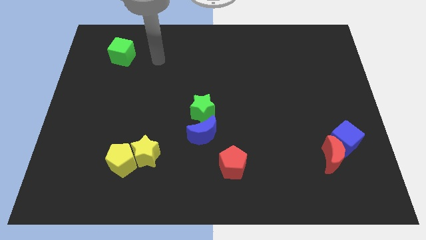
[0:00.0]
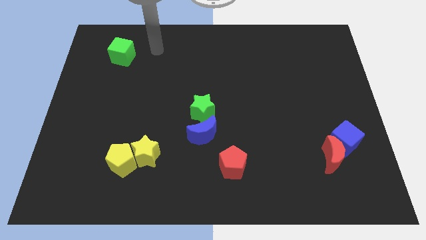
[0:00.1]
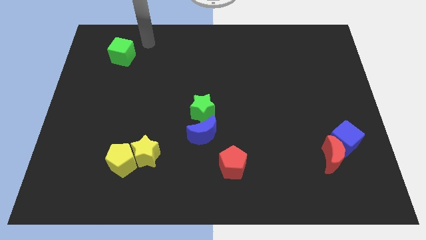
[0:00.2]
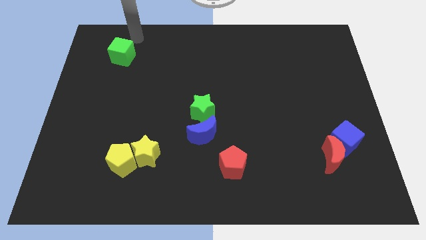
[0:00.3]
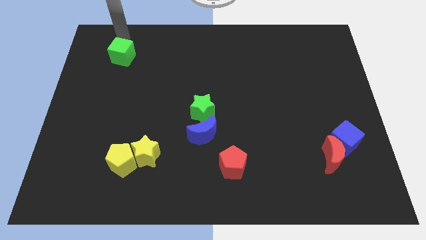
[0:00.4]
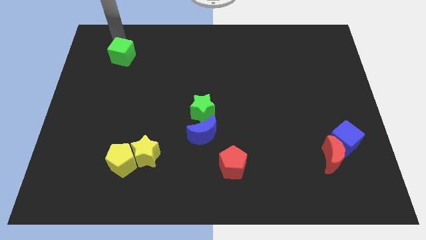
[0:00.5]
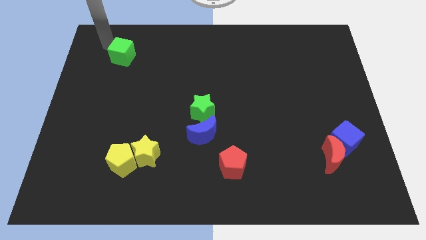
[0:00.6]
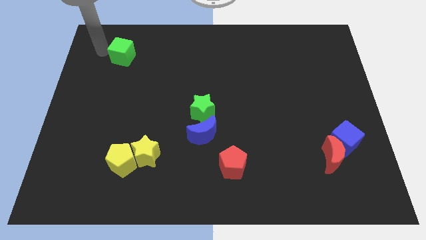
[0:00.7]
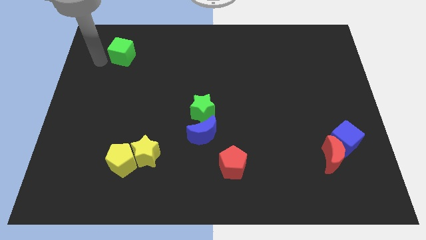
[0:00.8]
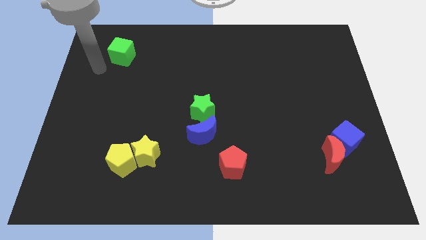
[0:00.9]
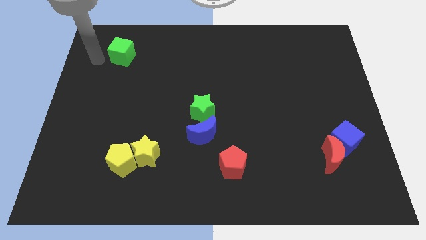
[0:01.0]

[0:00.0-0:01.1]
move arm below the green cube

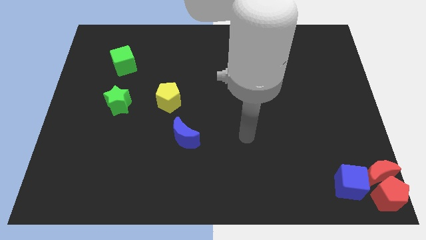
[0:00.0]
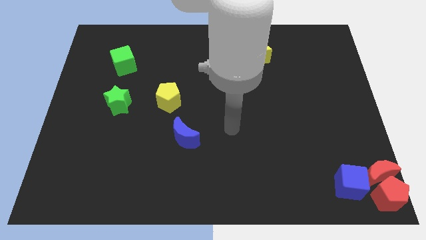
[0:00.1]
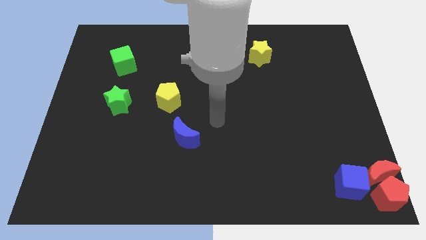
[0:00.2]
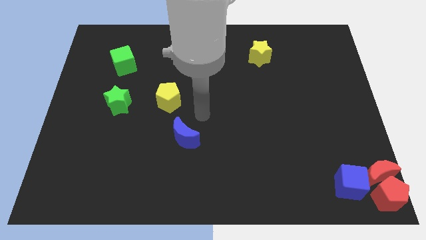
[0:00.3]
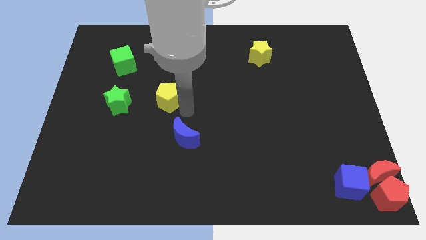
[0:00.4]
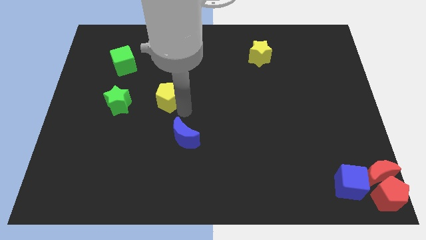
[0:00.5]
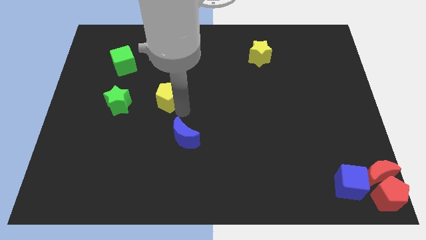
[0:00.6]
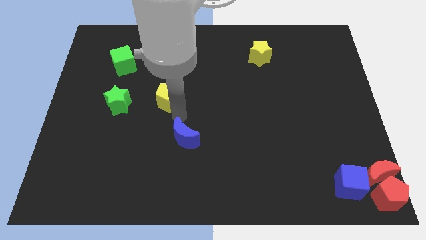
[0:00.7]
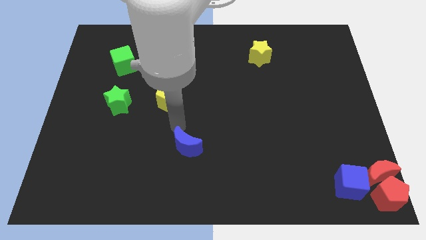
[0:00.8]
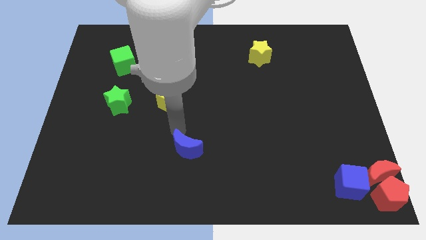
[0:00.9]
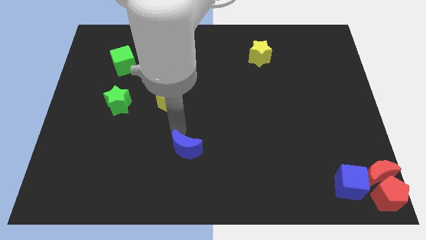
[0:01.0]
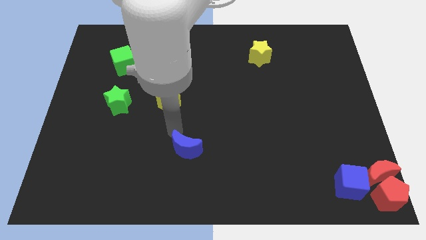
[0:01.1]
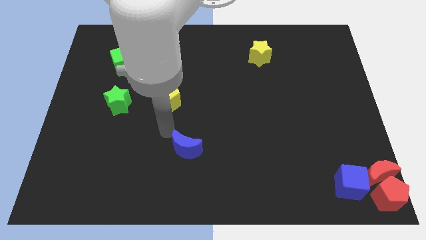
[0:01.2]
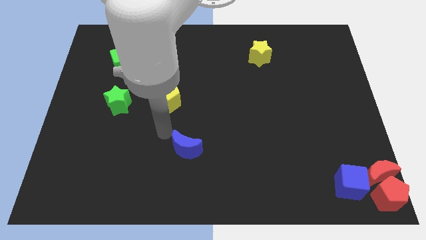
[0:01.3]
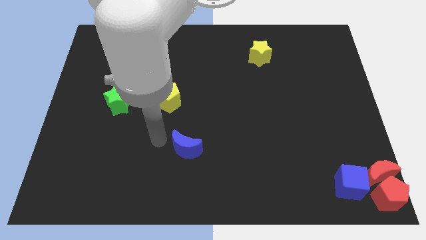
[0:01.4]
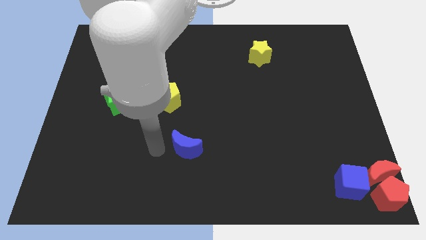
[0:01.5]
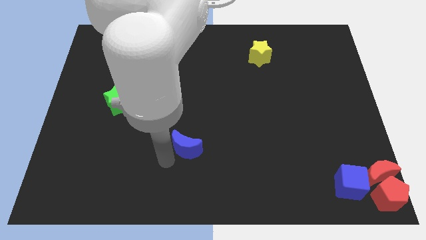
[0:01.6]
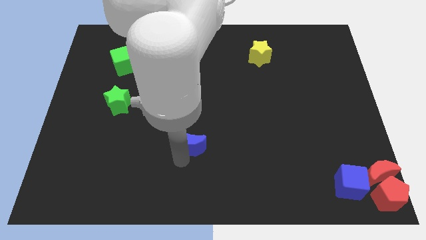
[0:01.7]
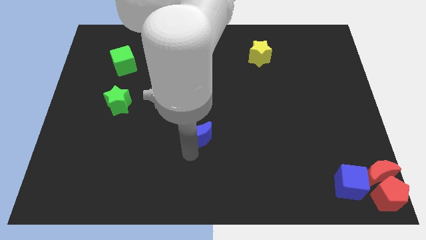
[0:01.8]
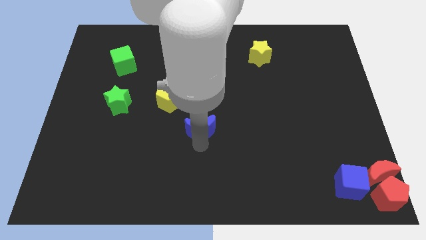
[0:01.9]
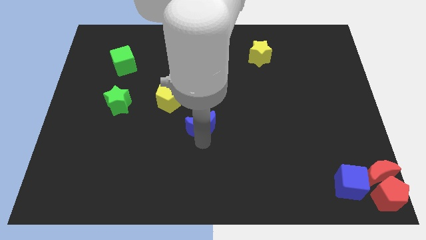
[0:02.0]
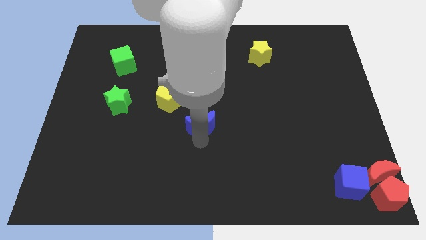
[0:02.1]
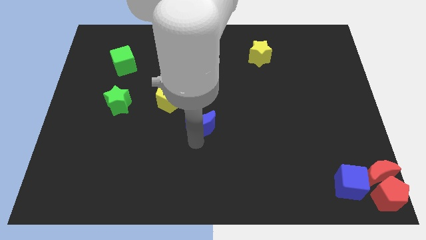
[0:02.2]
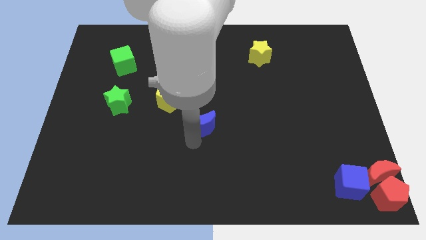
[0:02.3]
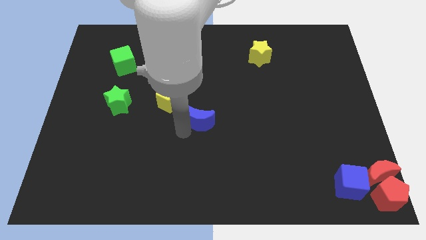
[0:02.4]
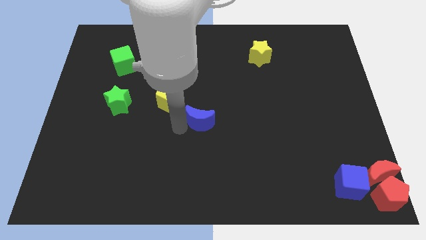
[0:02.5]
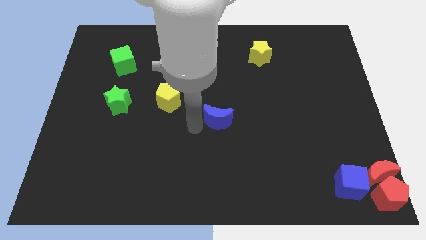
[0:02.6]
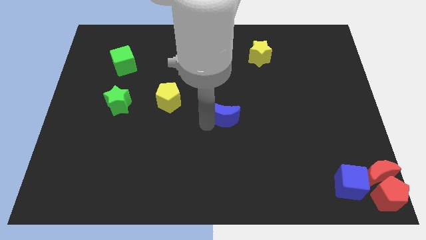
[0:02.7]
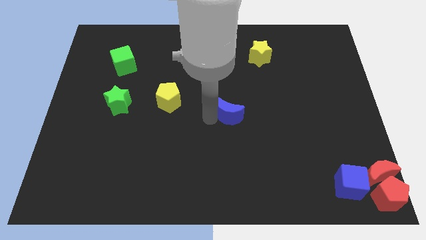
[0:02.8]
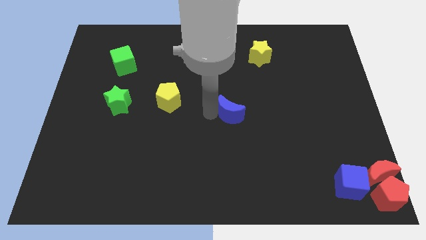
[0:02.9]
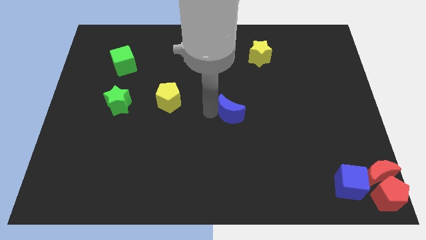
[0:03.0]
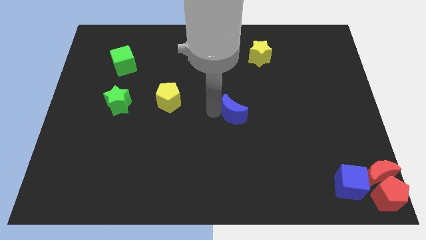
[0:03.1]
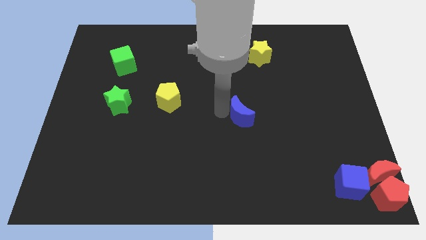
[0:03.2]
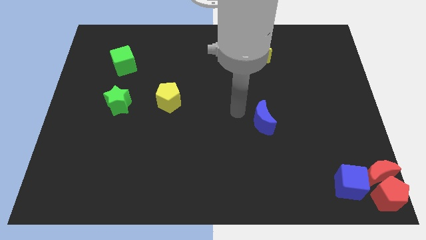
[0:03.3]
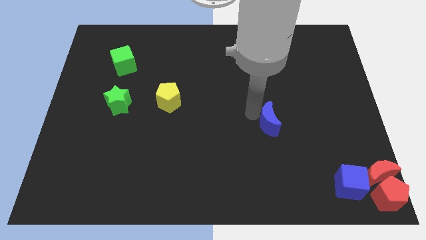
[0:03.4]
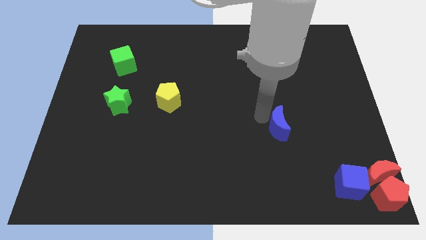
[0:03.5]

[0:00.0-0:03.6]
push the blue moon to the bottom side of the yellow star

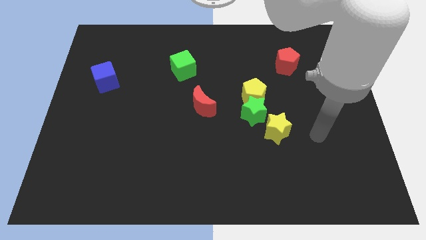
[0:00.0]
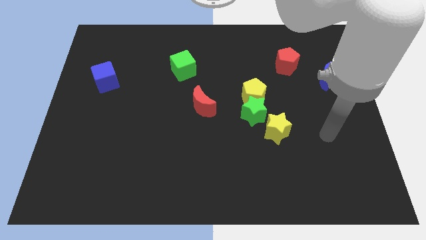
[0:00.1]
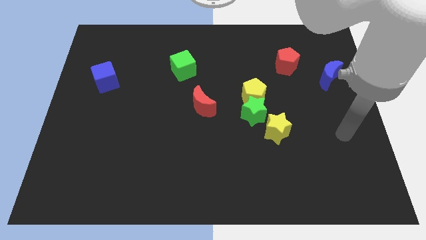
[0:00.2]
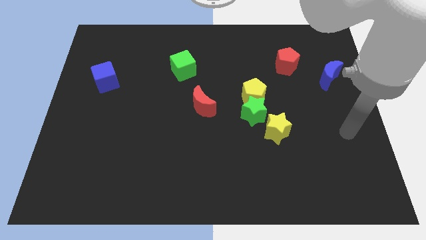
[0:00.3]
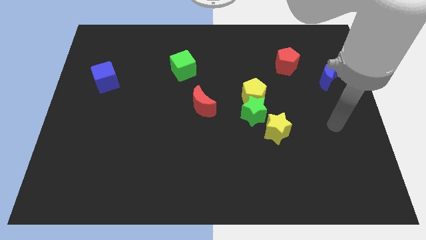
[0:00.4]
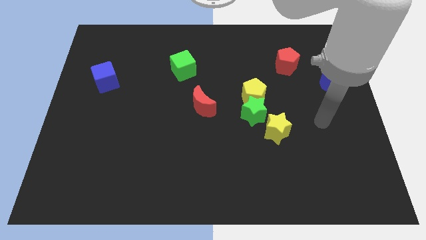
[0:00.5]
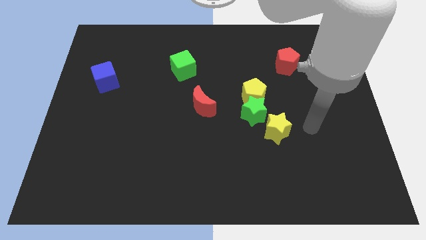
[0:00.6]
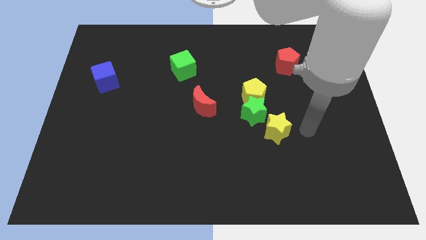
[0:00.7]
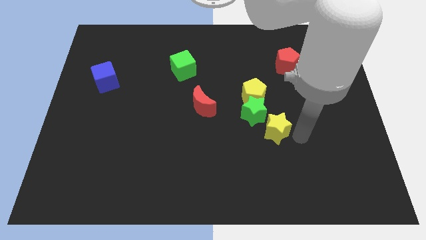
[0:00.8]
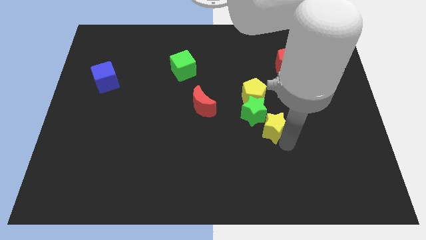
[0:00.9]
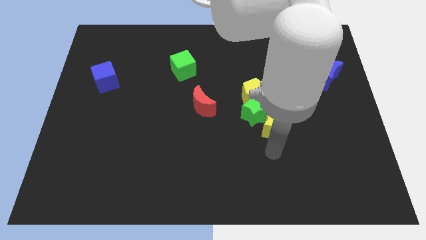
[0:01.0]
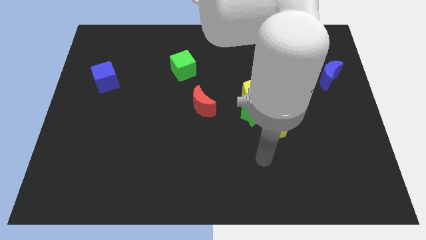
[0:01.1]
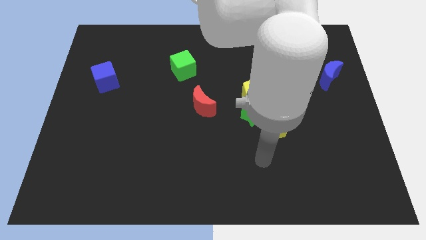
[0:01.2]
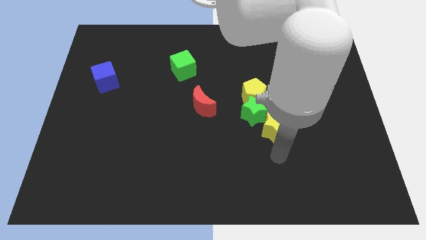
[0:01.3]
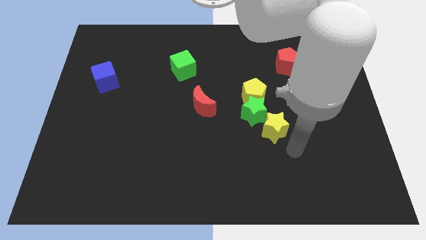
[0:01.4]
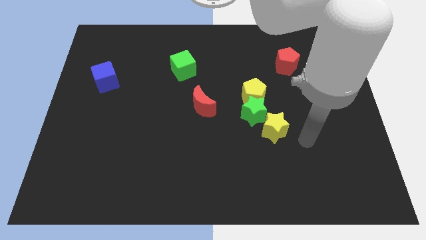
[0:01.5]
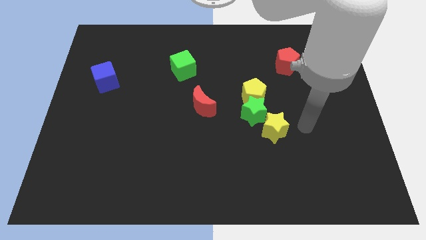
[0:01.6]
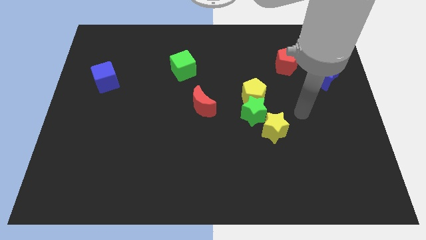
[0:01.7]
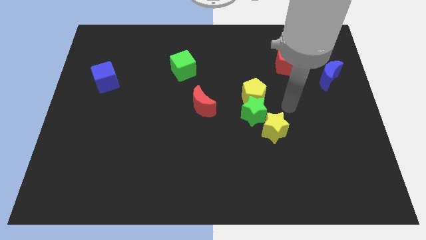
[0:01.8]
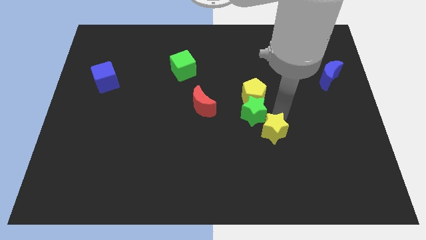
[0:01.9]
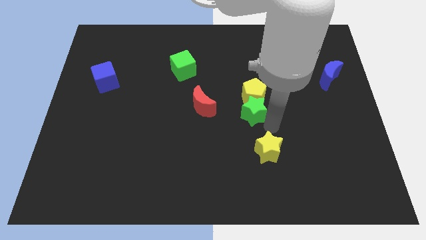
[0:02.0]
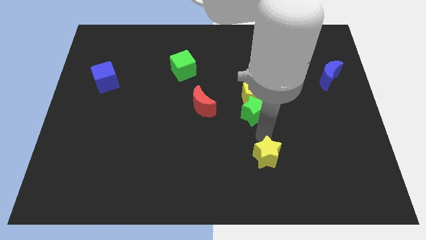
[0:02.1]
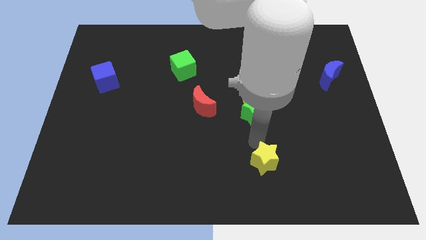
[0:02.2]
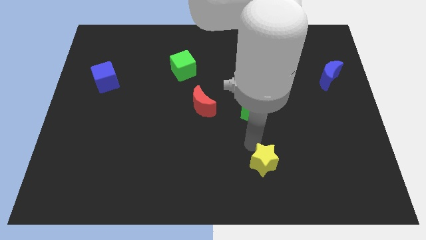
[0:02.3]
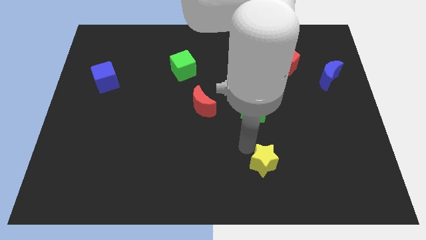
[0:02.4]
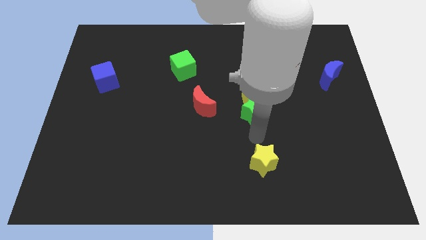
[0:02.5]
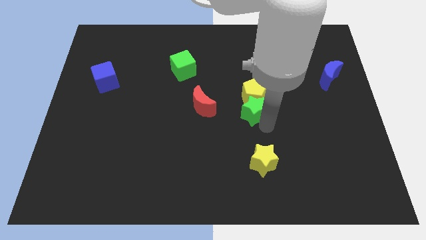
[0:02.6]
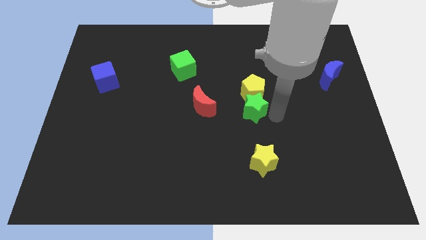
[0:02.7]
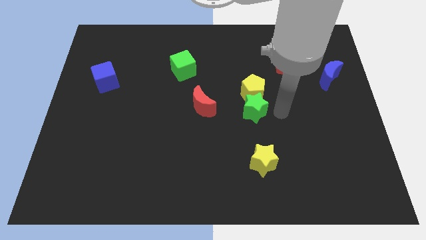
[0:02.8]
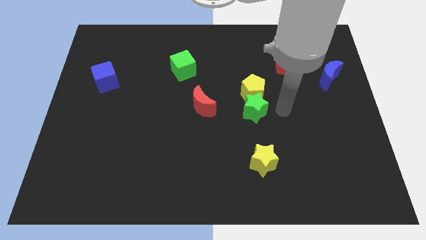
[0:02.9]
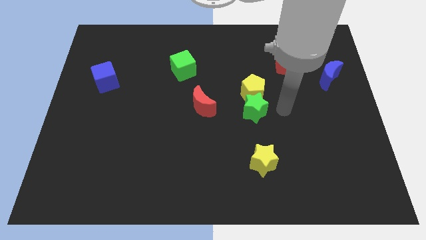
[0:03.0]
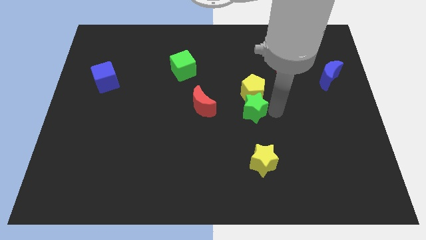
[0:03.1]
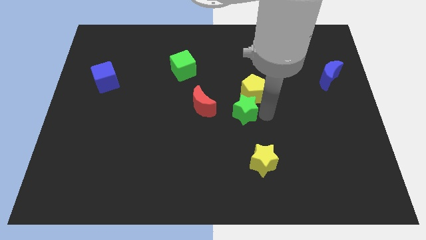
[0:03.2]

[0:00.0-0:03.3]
separate the yellow star from the green star

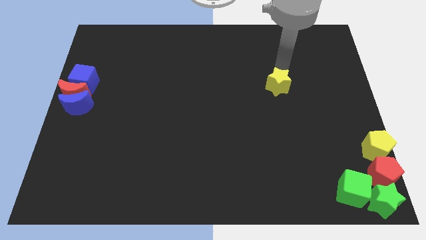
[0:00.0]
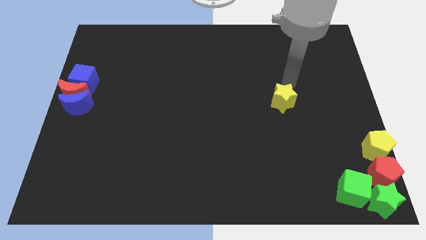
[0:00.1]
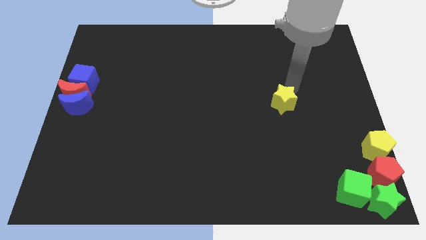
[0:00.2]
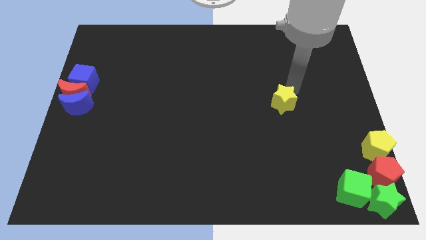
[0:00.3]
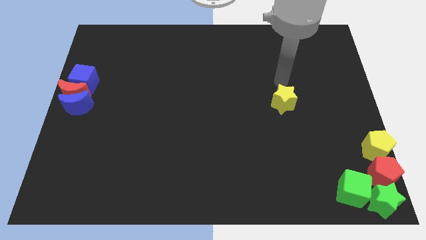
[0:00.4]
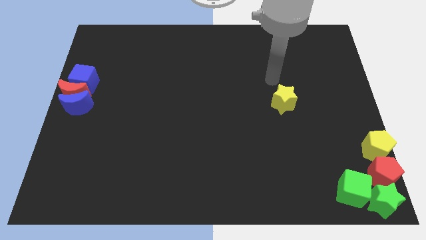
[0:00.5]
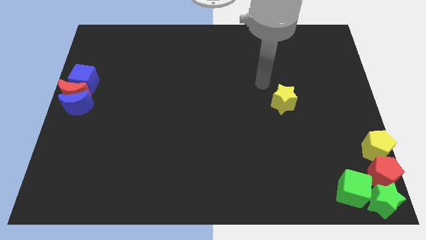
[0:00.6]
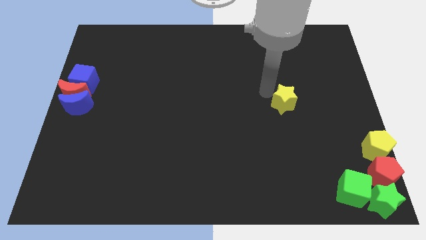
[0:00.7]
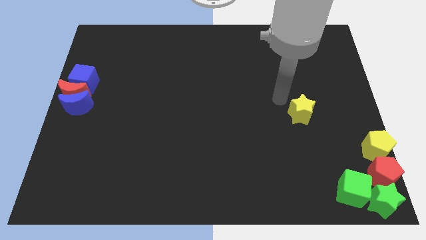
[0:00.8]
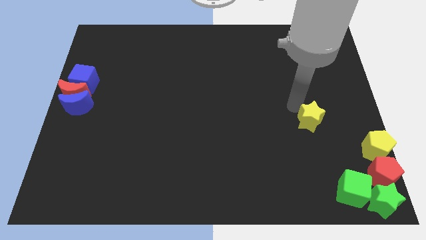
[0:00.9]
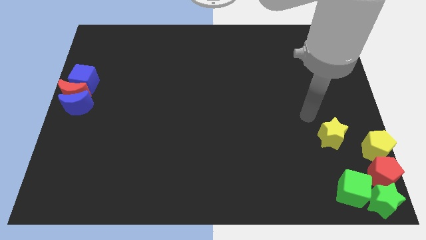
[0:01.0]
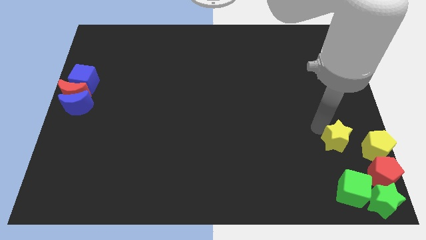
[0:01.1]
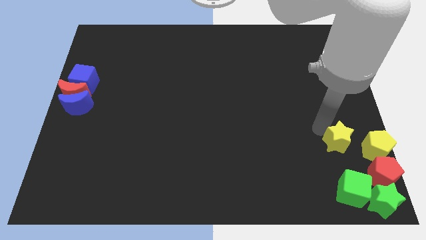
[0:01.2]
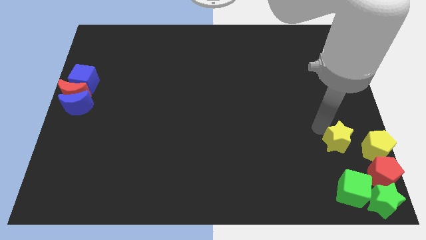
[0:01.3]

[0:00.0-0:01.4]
move yellow star left to yellow pentagon
